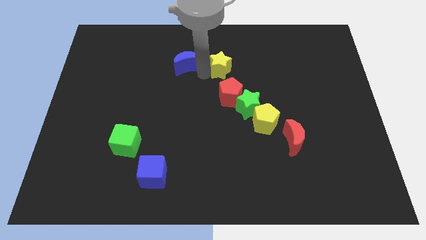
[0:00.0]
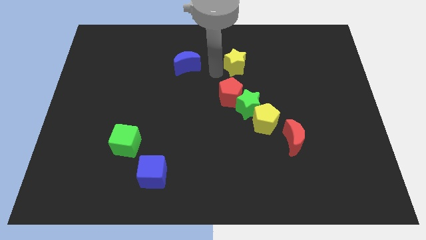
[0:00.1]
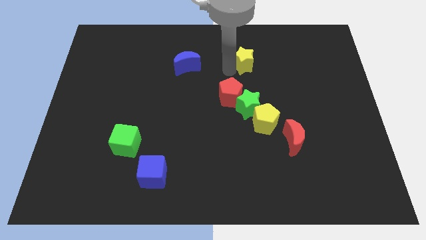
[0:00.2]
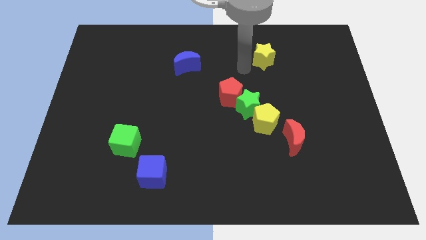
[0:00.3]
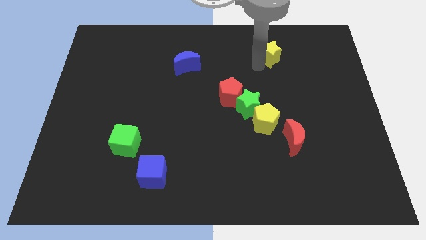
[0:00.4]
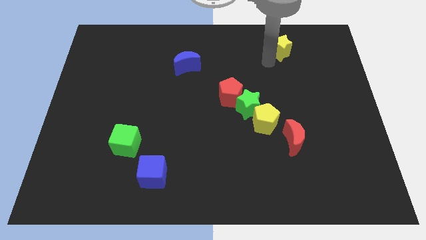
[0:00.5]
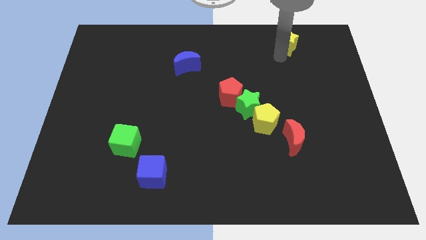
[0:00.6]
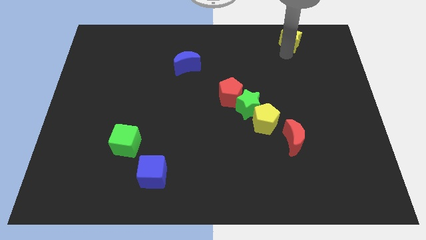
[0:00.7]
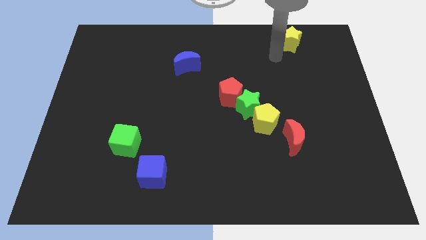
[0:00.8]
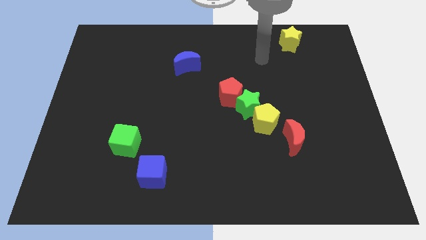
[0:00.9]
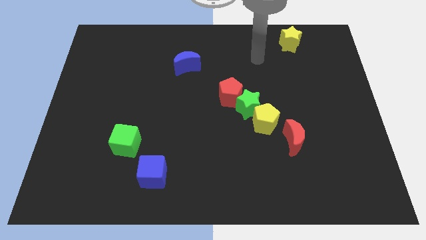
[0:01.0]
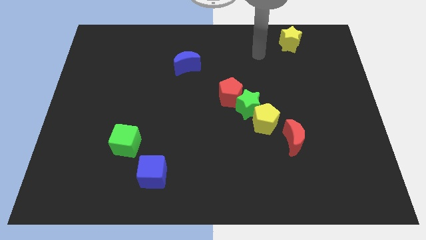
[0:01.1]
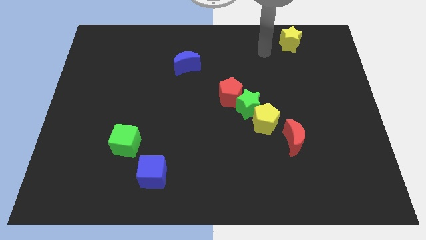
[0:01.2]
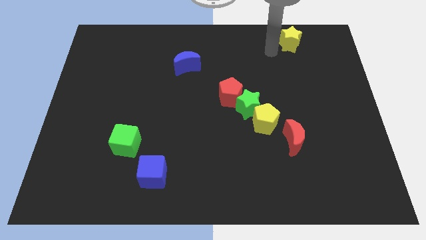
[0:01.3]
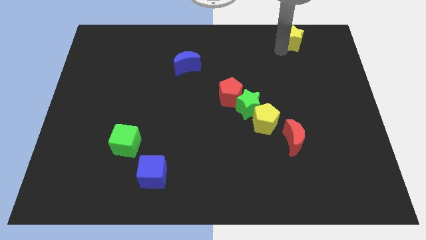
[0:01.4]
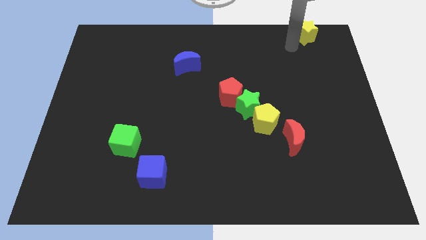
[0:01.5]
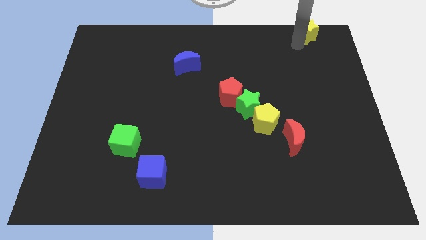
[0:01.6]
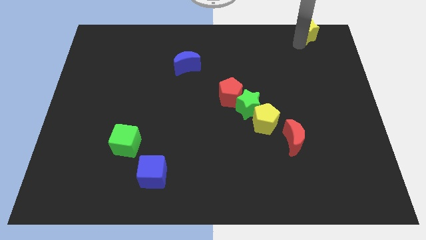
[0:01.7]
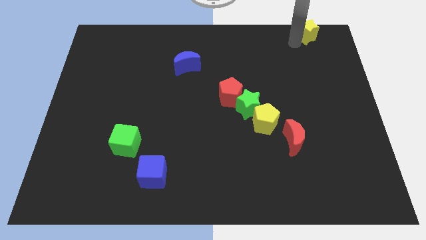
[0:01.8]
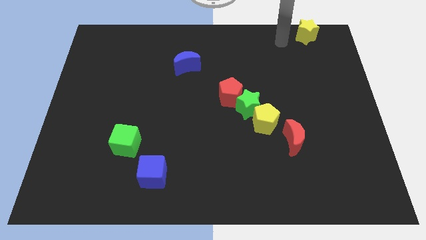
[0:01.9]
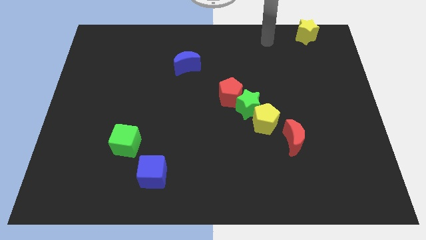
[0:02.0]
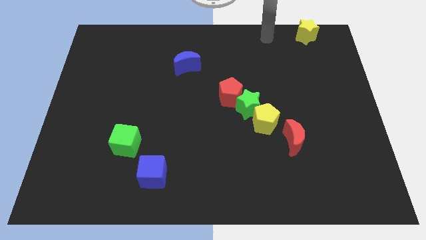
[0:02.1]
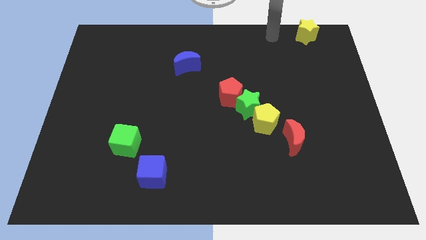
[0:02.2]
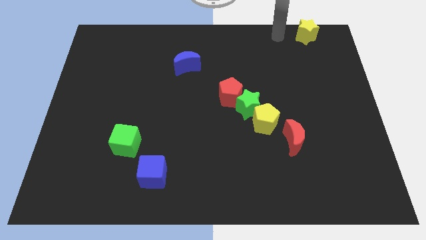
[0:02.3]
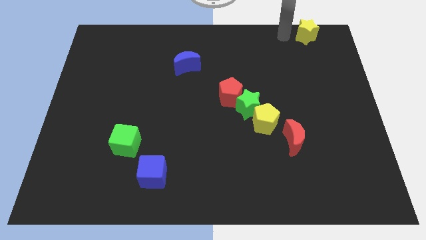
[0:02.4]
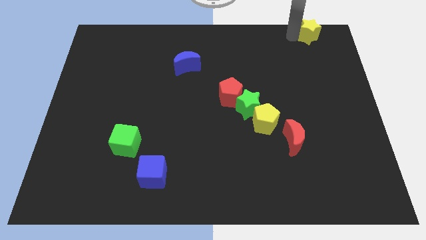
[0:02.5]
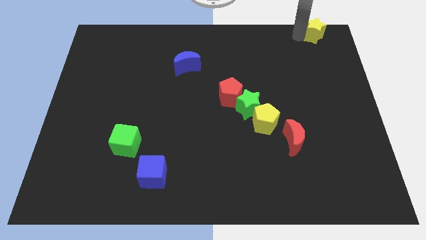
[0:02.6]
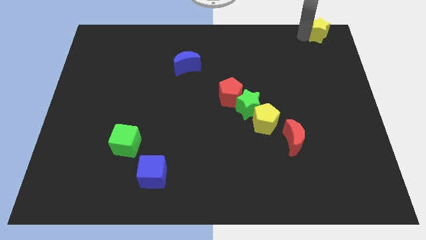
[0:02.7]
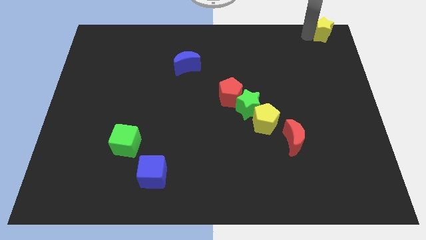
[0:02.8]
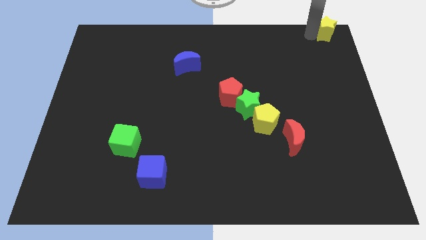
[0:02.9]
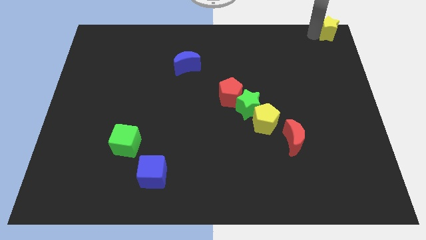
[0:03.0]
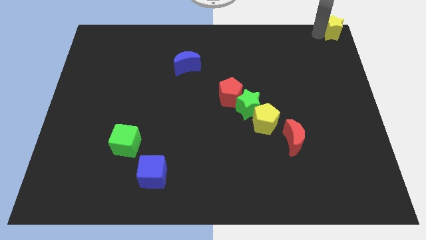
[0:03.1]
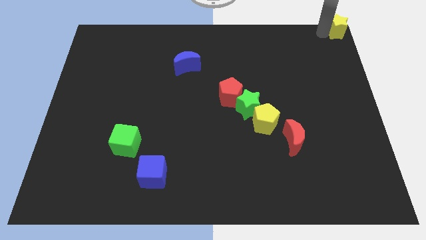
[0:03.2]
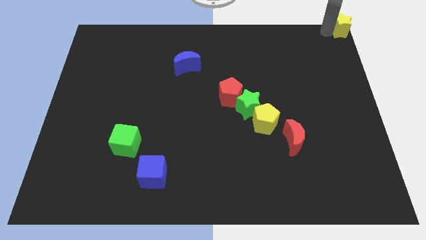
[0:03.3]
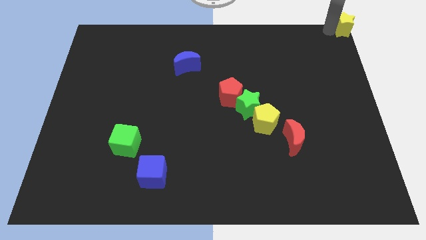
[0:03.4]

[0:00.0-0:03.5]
move the yellow star to the top right of the board

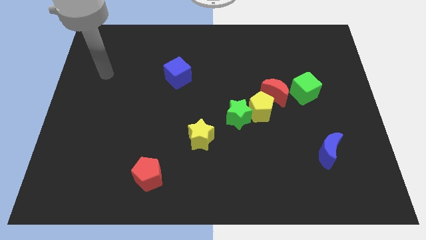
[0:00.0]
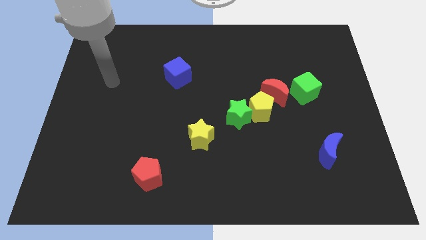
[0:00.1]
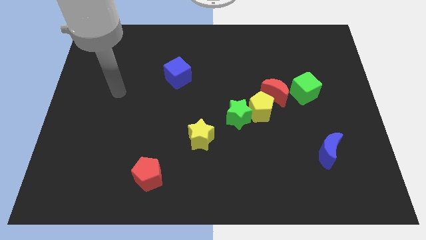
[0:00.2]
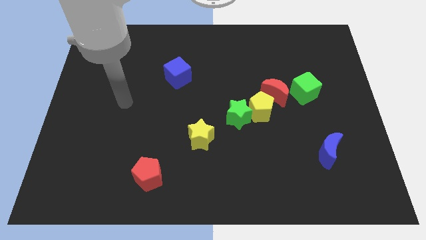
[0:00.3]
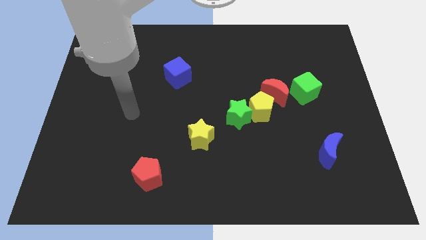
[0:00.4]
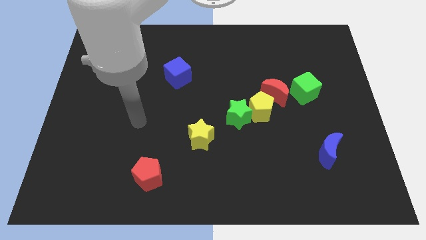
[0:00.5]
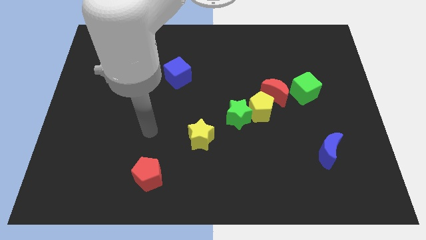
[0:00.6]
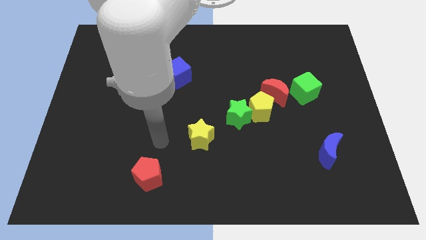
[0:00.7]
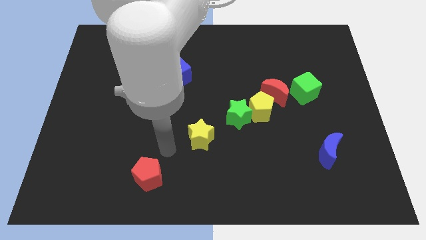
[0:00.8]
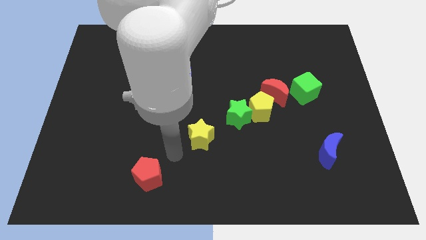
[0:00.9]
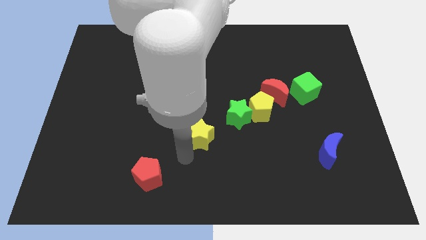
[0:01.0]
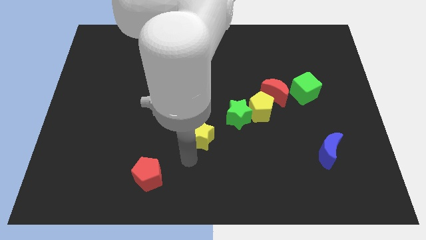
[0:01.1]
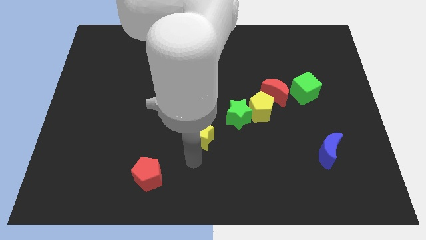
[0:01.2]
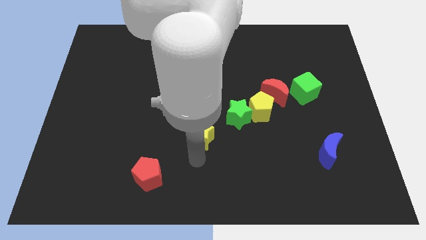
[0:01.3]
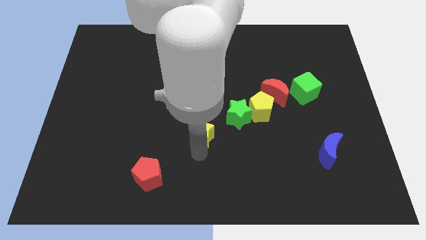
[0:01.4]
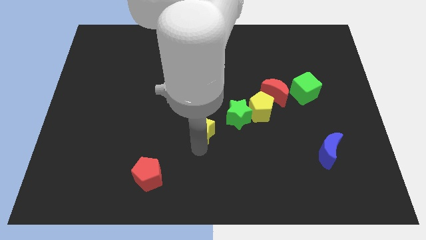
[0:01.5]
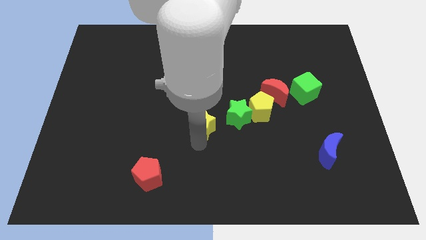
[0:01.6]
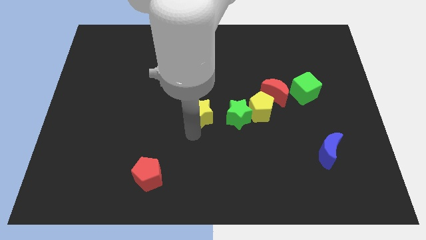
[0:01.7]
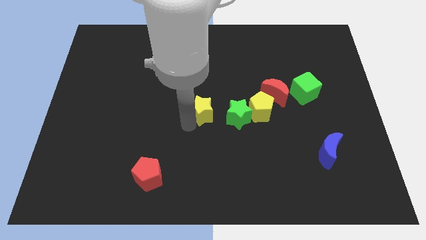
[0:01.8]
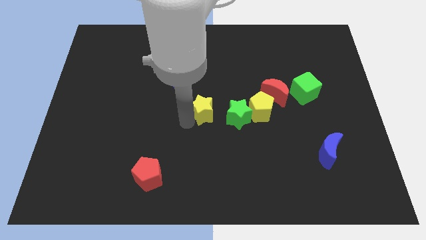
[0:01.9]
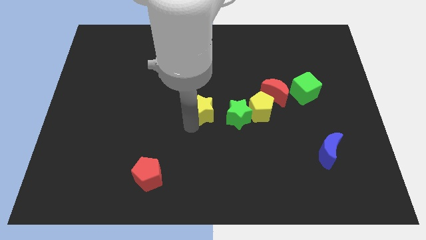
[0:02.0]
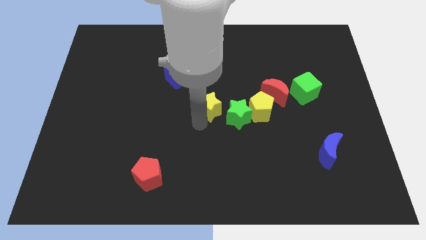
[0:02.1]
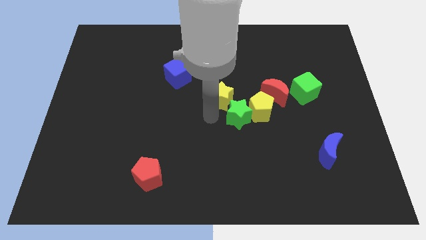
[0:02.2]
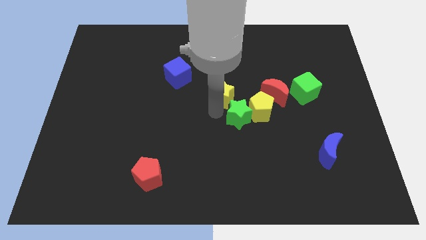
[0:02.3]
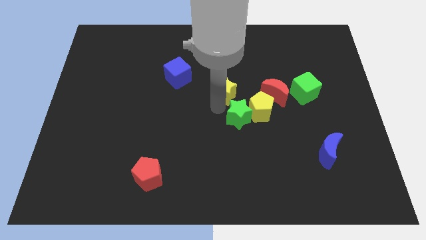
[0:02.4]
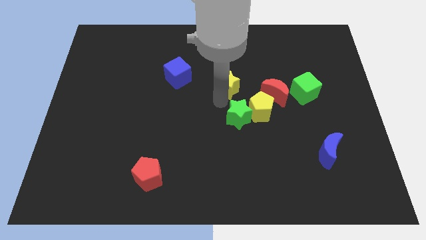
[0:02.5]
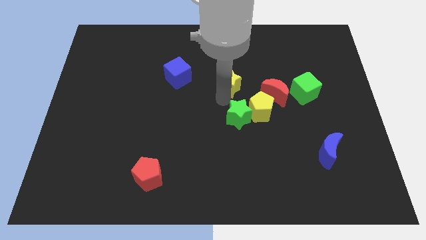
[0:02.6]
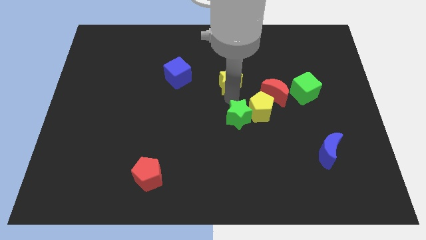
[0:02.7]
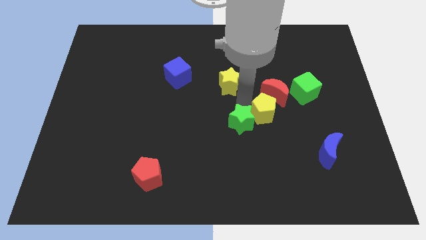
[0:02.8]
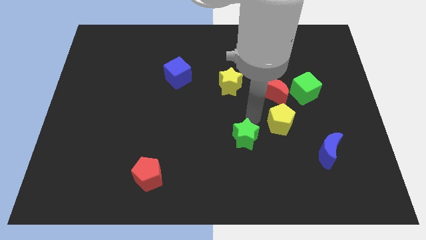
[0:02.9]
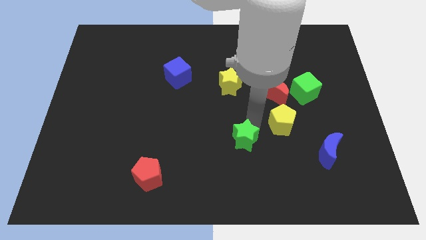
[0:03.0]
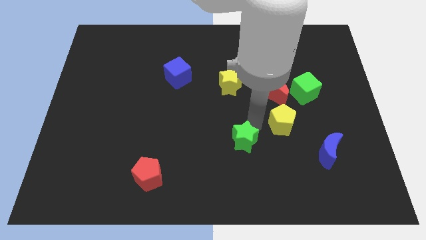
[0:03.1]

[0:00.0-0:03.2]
separate the green star and yellow pentagon

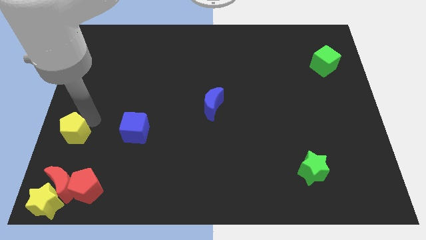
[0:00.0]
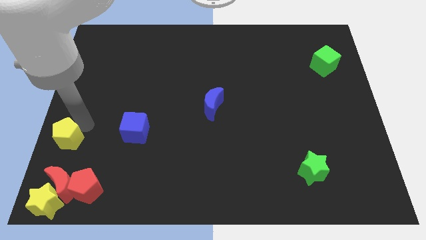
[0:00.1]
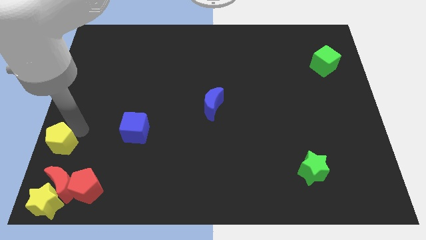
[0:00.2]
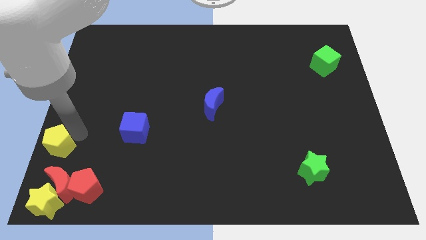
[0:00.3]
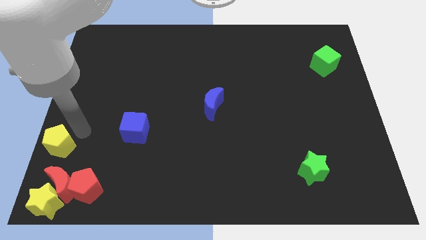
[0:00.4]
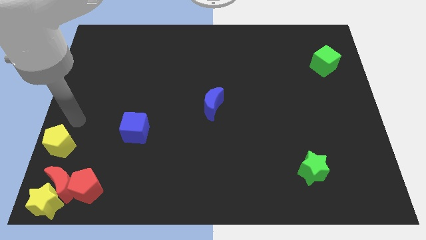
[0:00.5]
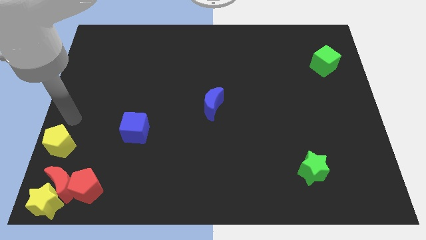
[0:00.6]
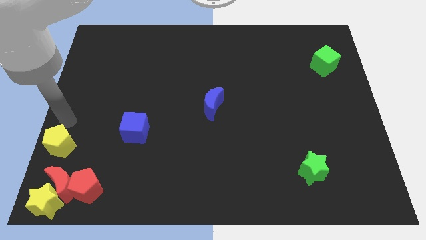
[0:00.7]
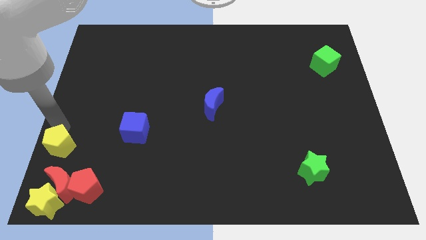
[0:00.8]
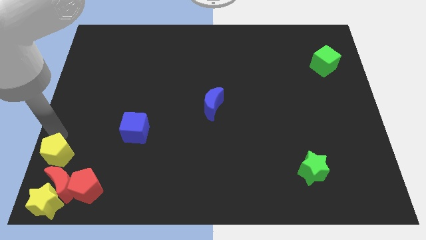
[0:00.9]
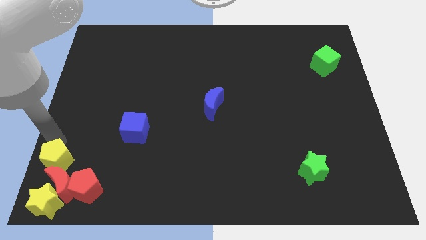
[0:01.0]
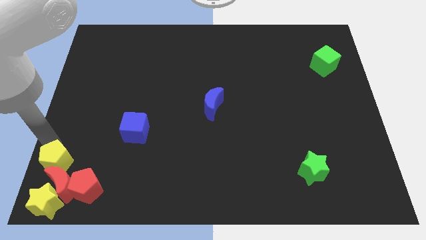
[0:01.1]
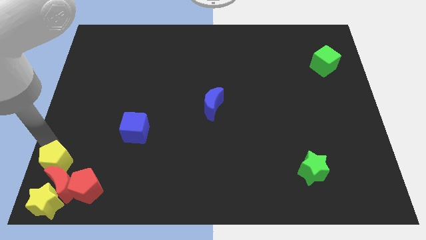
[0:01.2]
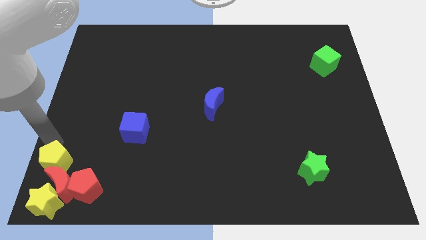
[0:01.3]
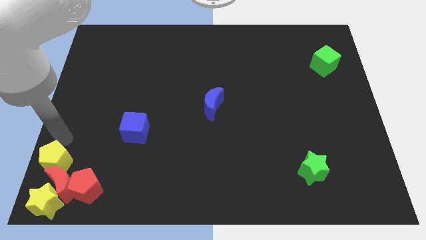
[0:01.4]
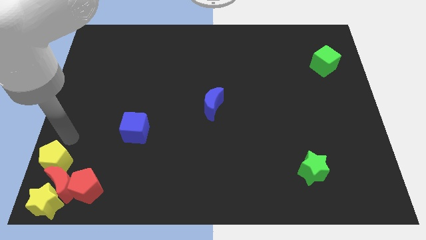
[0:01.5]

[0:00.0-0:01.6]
move the yellow pentagon above to the red crescent
